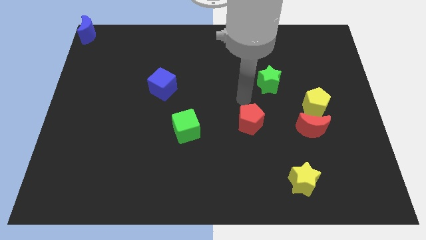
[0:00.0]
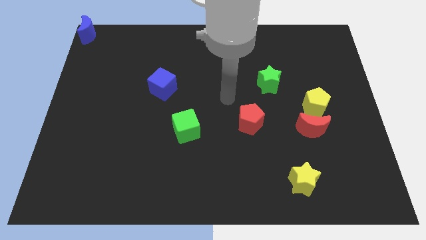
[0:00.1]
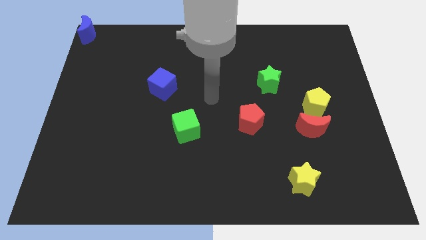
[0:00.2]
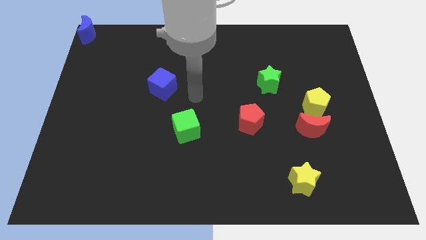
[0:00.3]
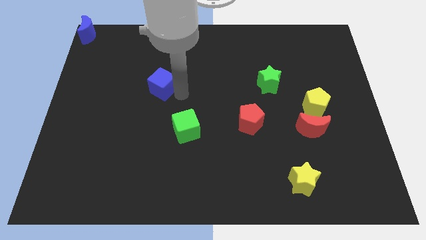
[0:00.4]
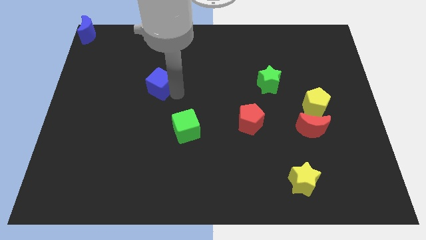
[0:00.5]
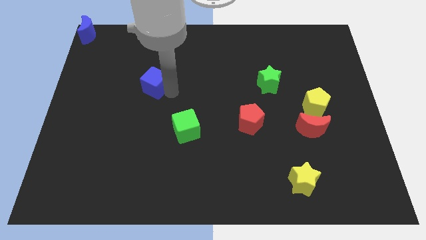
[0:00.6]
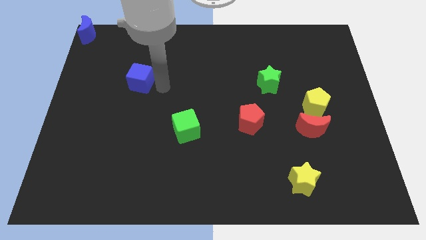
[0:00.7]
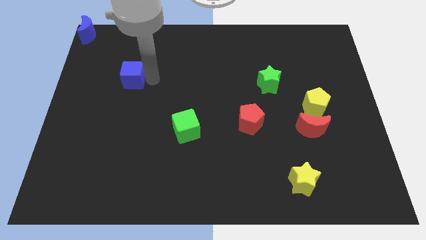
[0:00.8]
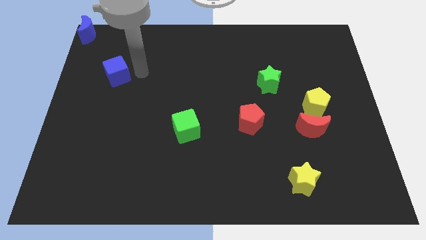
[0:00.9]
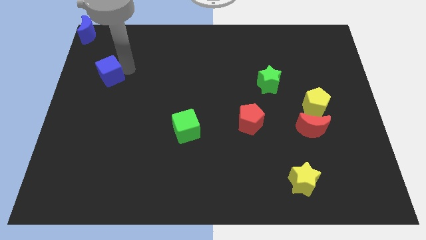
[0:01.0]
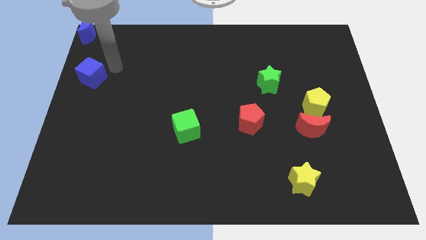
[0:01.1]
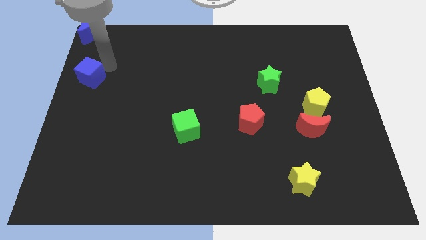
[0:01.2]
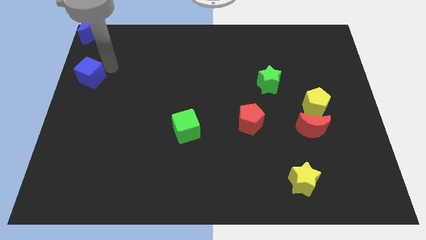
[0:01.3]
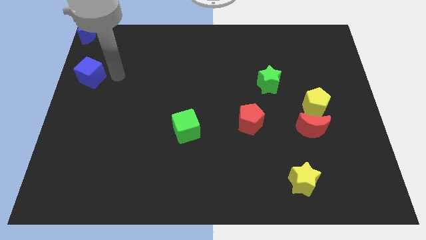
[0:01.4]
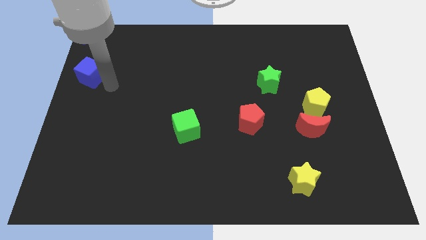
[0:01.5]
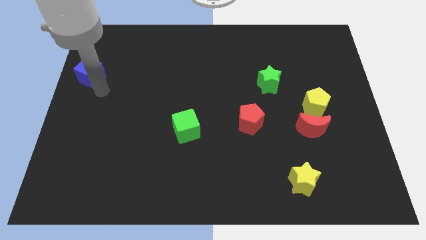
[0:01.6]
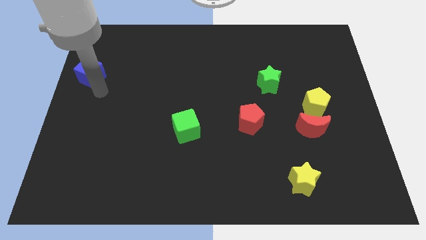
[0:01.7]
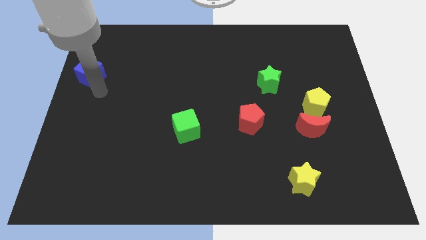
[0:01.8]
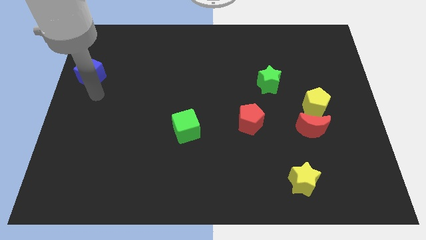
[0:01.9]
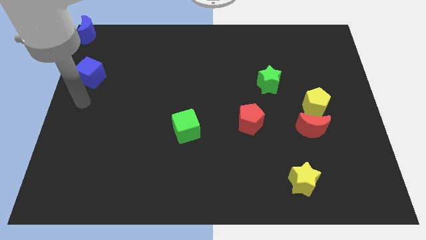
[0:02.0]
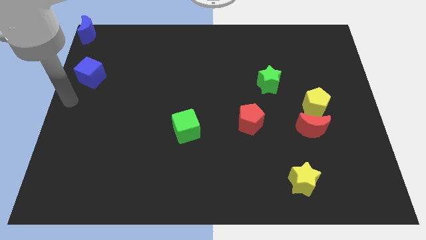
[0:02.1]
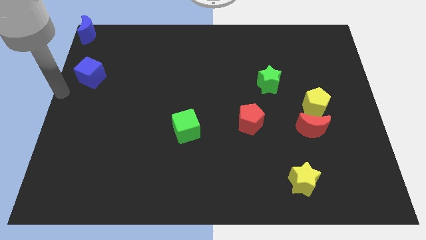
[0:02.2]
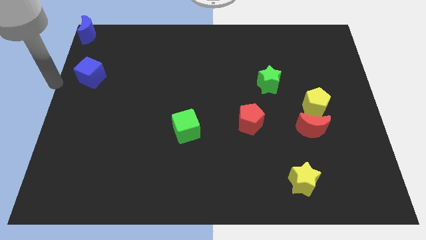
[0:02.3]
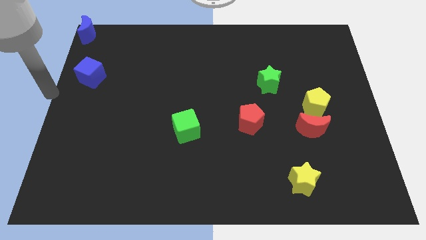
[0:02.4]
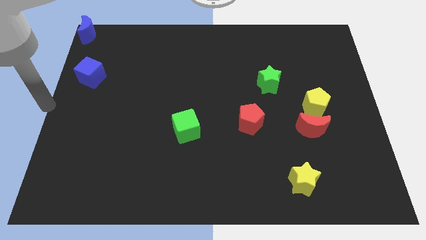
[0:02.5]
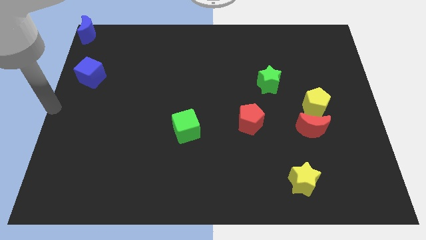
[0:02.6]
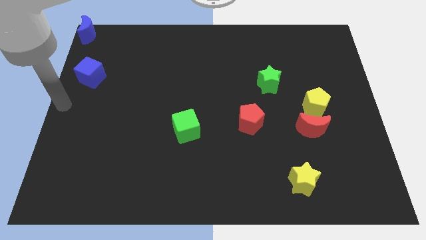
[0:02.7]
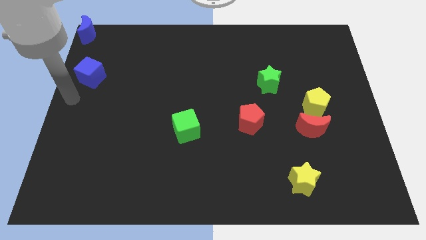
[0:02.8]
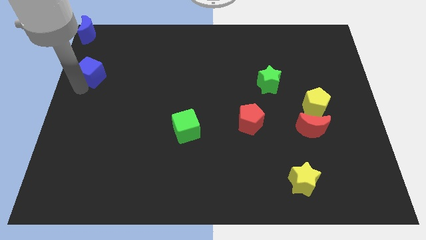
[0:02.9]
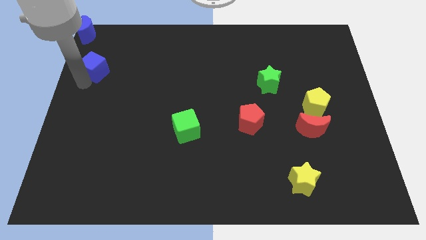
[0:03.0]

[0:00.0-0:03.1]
move blue cube below the blue moon

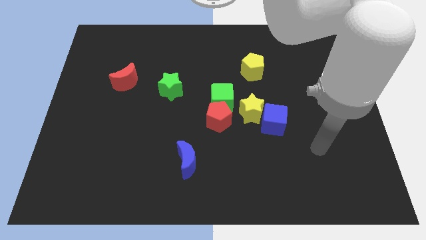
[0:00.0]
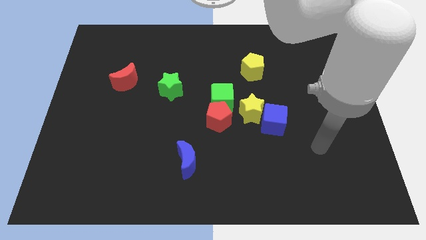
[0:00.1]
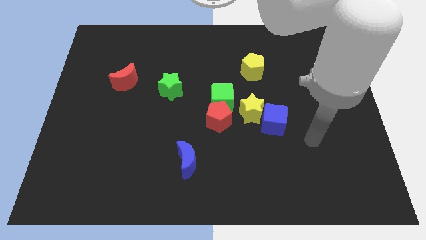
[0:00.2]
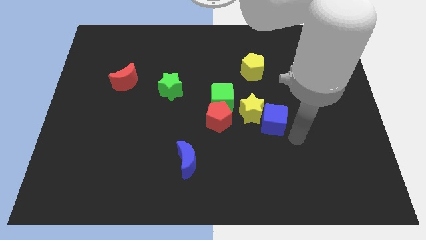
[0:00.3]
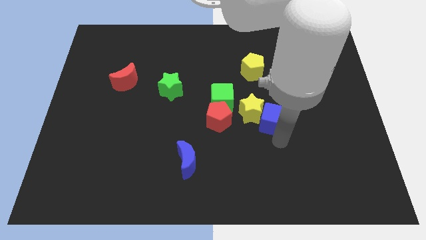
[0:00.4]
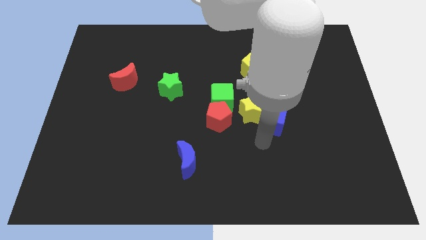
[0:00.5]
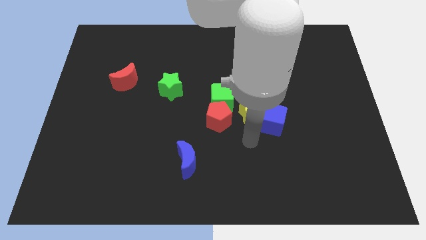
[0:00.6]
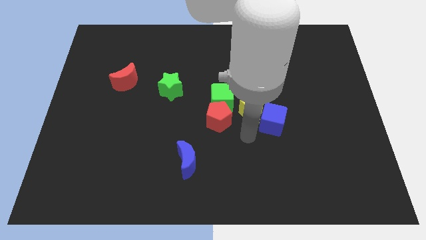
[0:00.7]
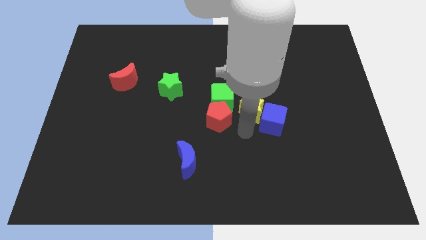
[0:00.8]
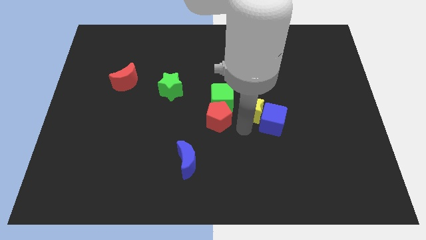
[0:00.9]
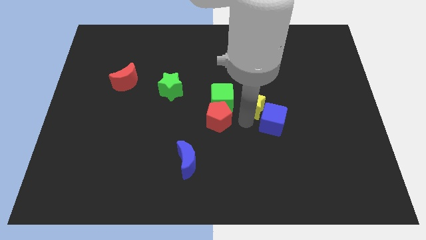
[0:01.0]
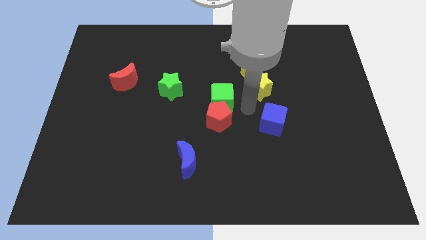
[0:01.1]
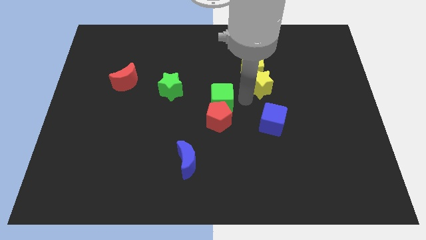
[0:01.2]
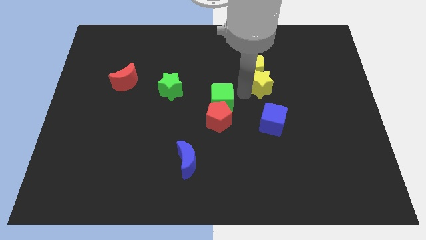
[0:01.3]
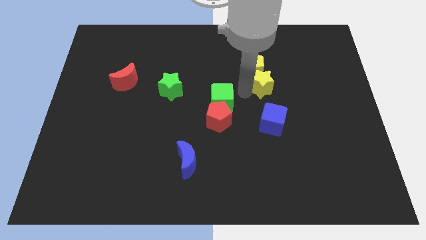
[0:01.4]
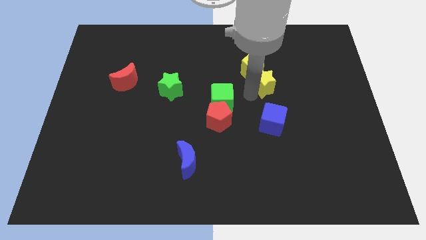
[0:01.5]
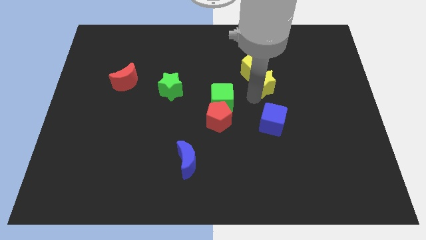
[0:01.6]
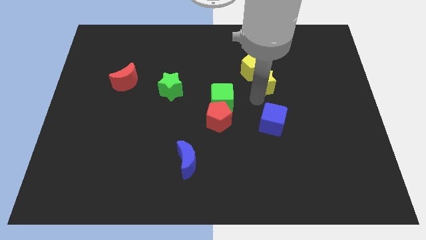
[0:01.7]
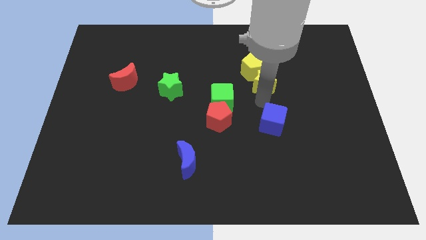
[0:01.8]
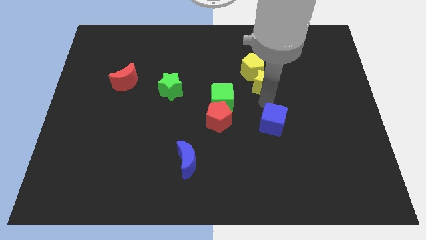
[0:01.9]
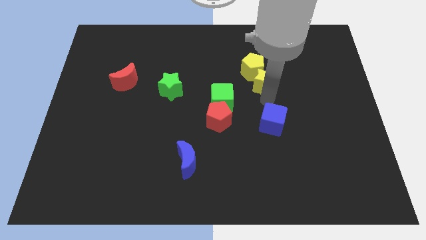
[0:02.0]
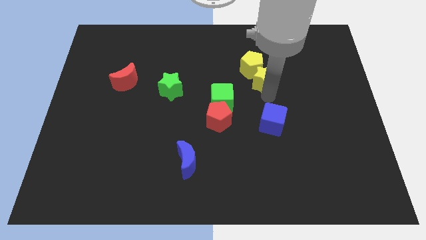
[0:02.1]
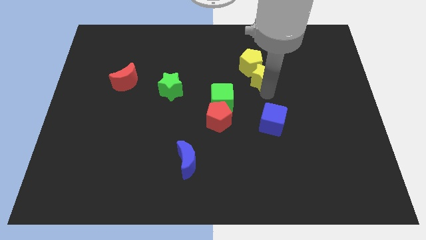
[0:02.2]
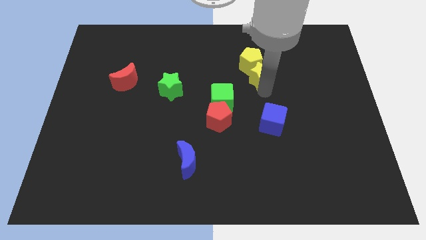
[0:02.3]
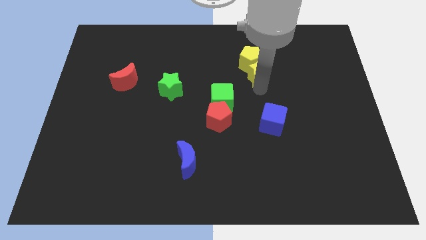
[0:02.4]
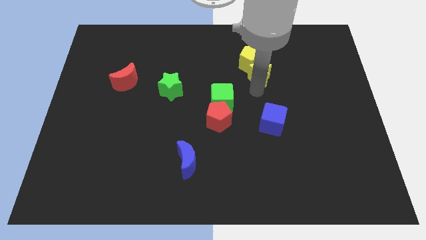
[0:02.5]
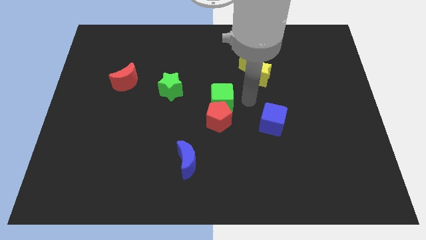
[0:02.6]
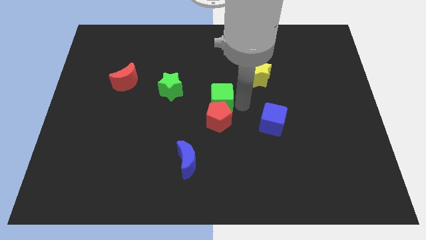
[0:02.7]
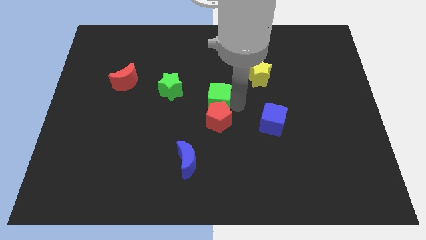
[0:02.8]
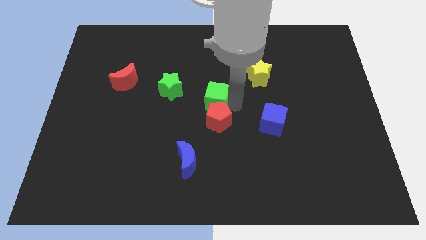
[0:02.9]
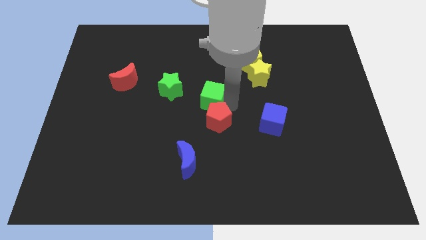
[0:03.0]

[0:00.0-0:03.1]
separate yellow star green cube from the group of blocks

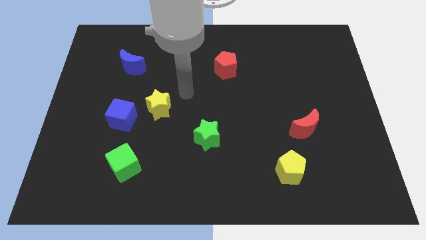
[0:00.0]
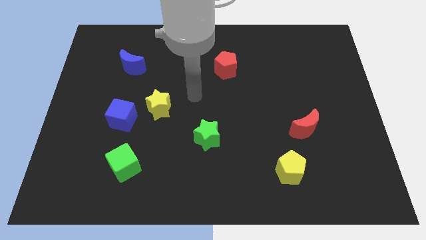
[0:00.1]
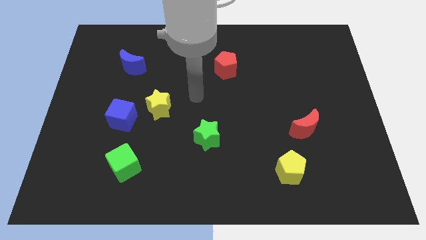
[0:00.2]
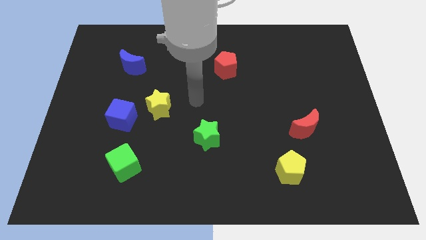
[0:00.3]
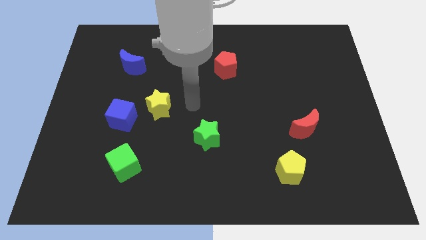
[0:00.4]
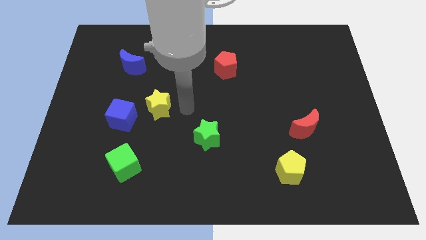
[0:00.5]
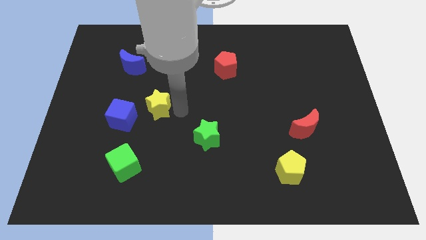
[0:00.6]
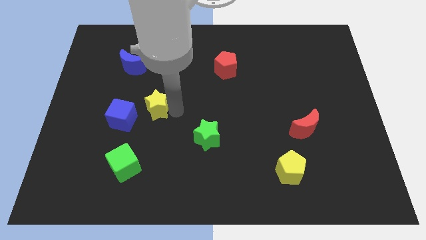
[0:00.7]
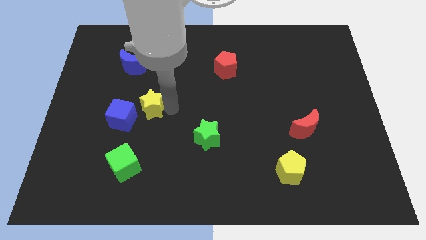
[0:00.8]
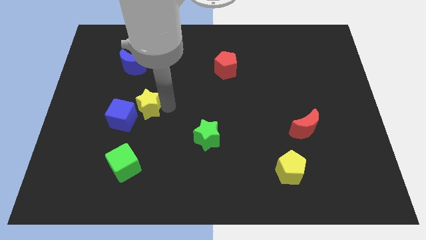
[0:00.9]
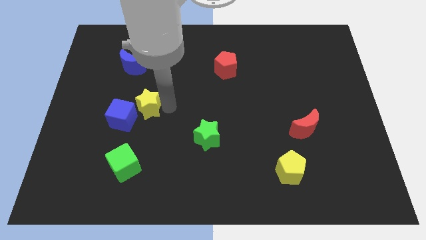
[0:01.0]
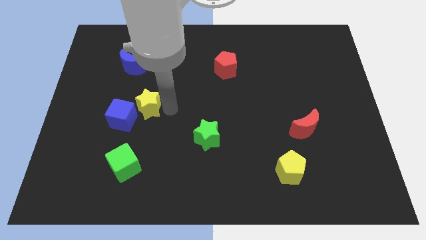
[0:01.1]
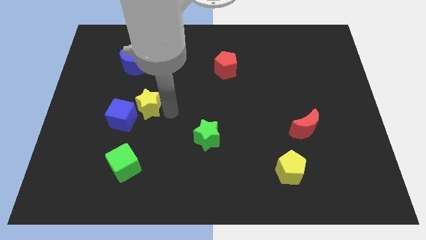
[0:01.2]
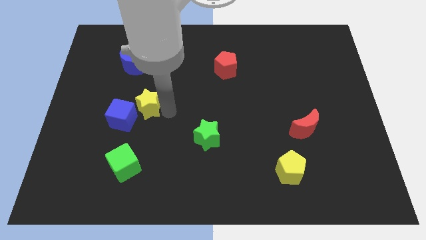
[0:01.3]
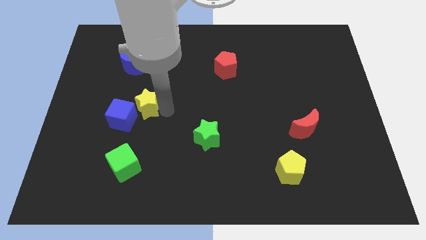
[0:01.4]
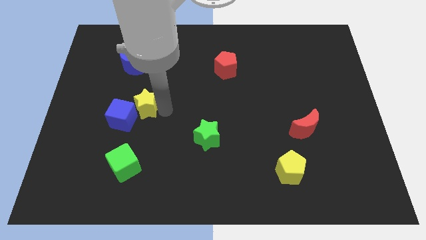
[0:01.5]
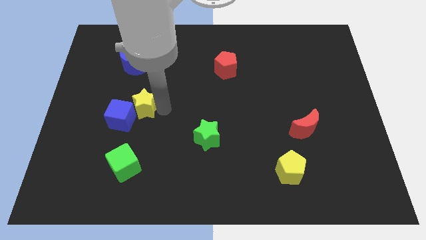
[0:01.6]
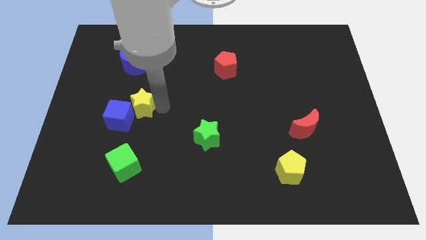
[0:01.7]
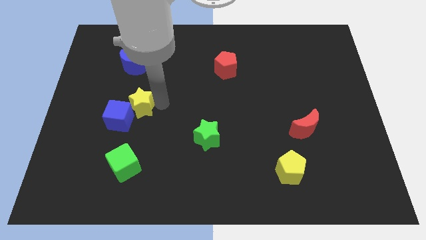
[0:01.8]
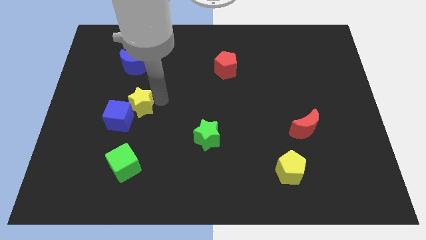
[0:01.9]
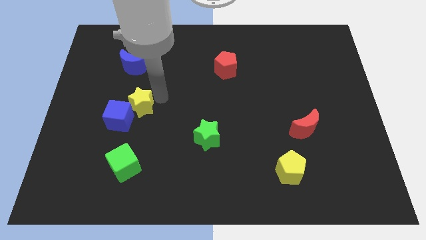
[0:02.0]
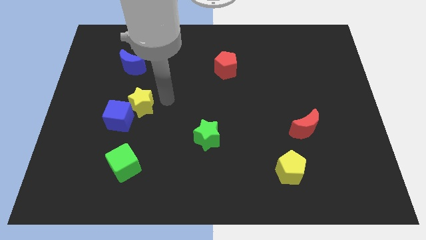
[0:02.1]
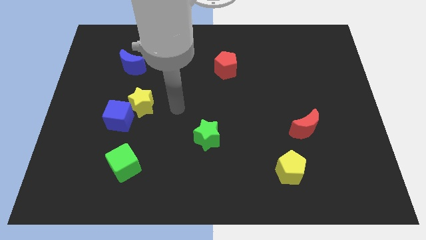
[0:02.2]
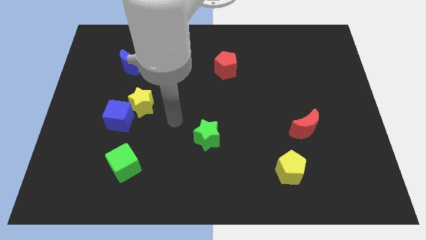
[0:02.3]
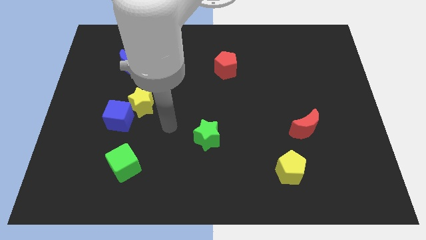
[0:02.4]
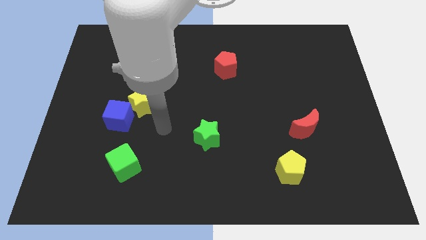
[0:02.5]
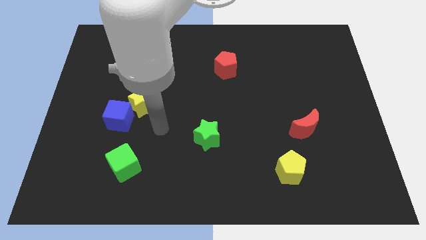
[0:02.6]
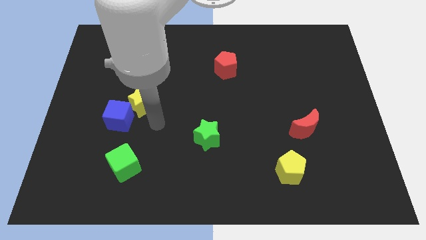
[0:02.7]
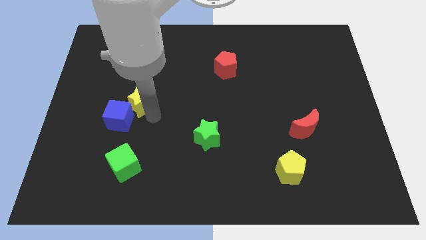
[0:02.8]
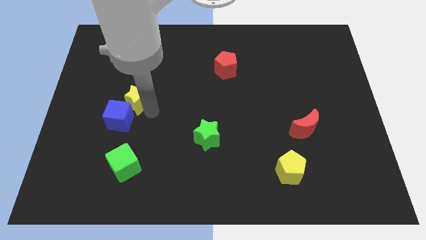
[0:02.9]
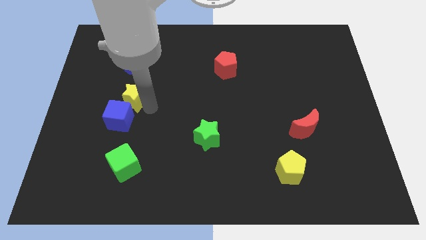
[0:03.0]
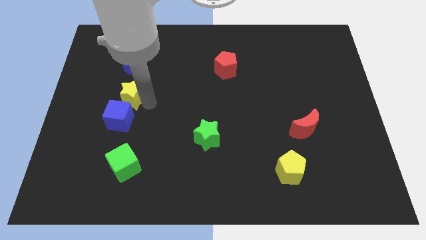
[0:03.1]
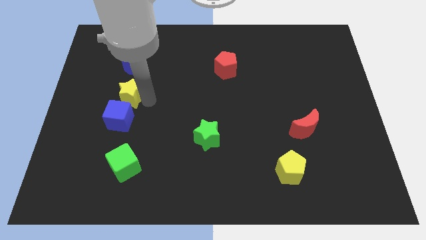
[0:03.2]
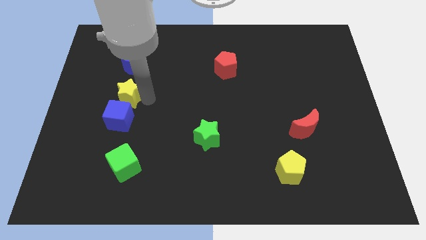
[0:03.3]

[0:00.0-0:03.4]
move the yellow star to the top of the blue cube
